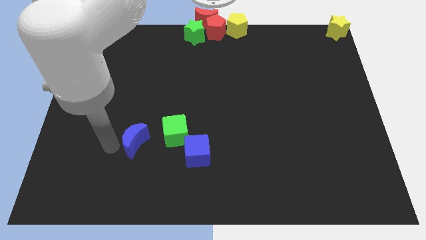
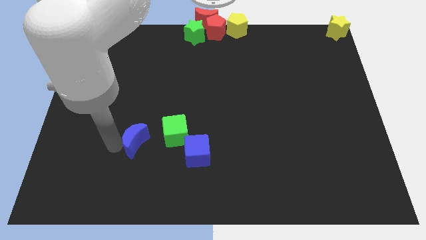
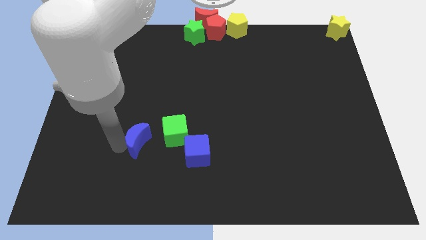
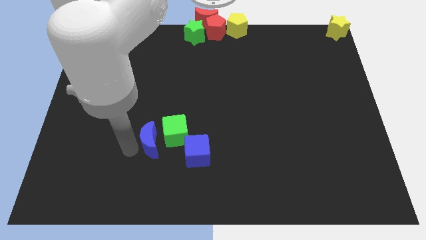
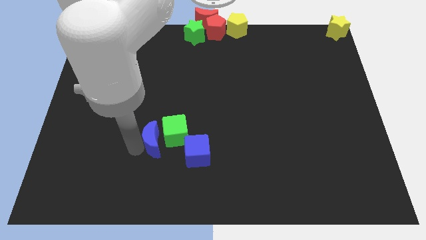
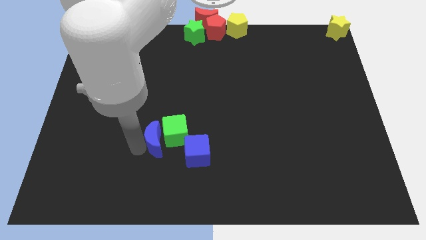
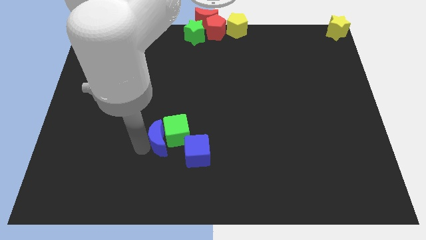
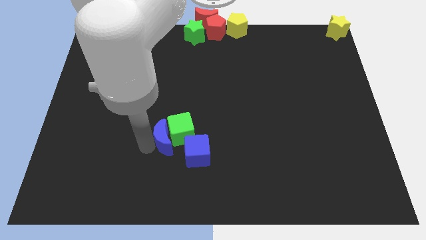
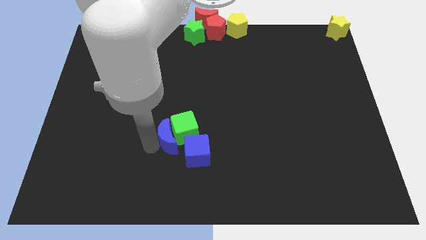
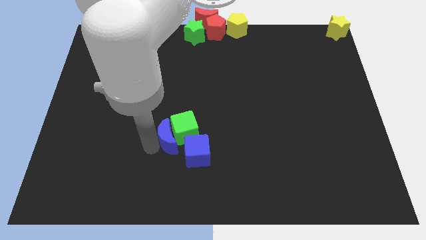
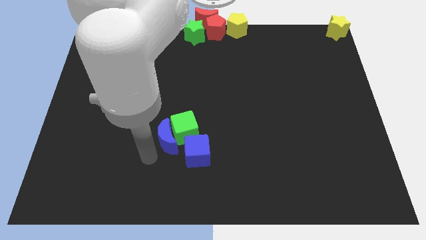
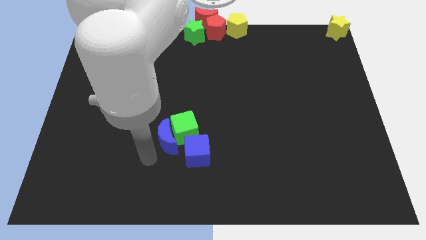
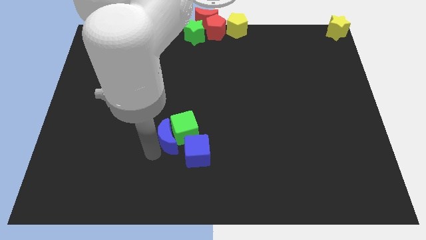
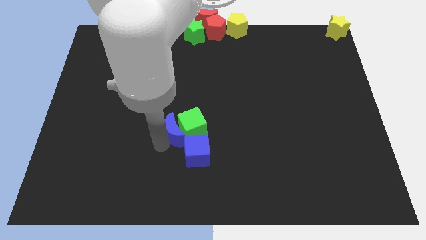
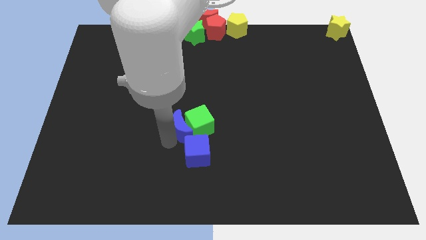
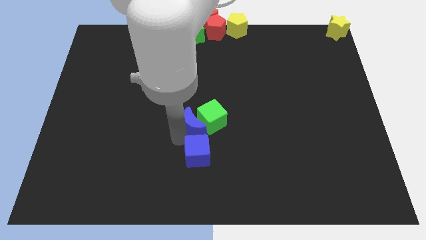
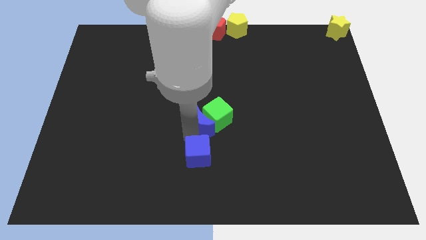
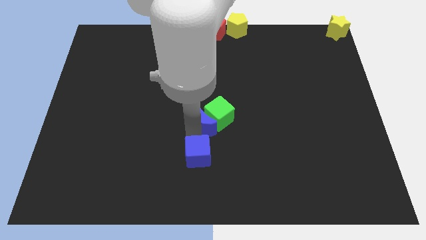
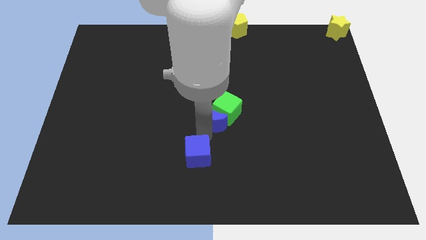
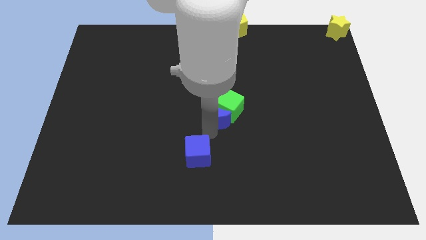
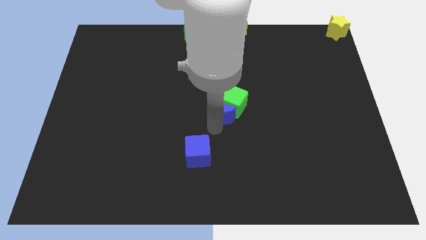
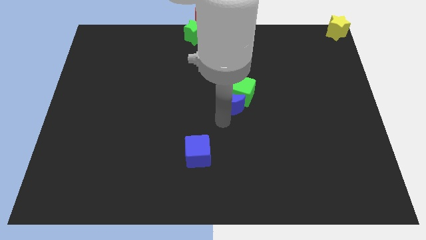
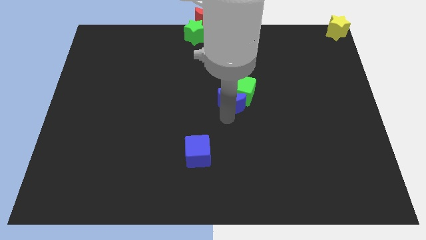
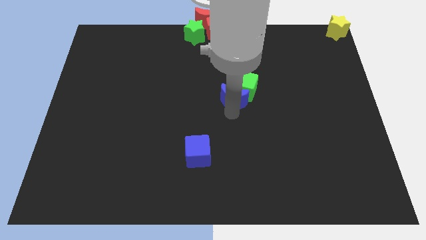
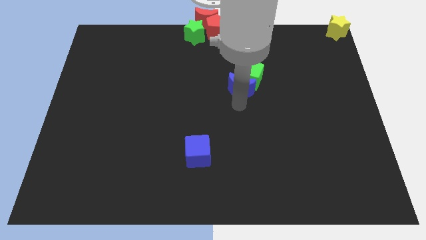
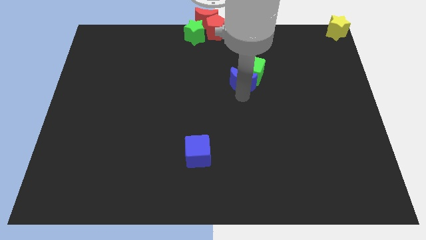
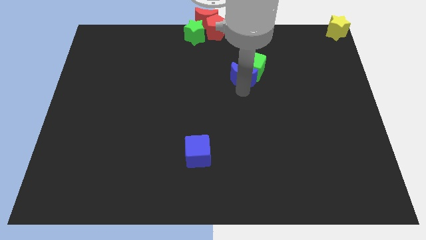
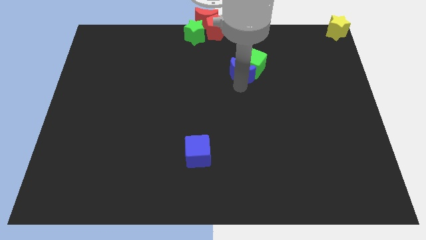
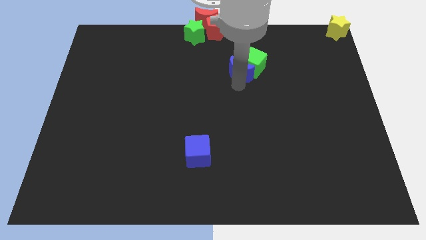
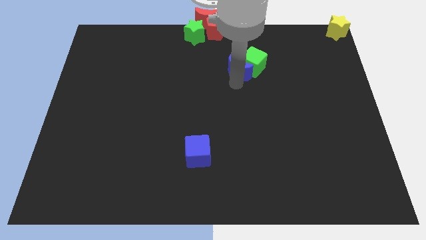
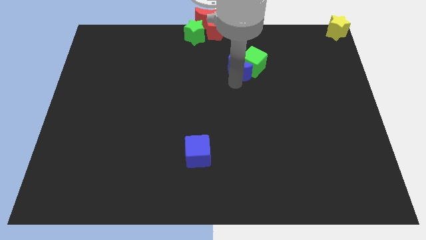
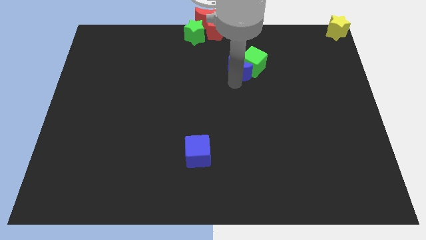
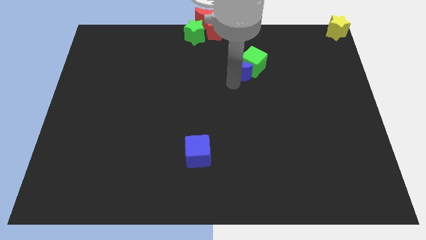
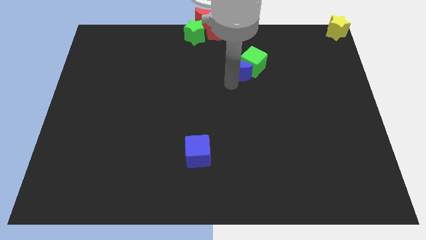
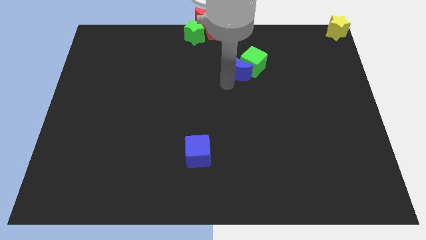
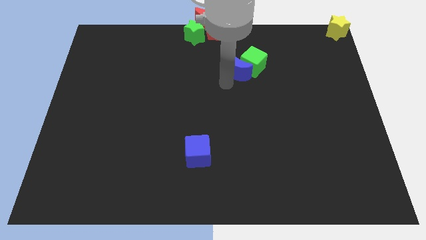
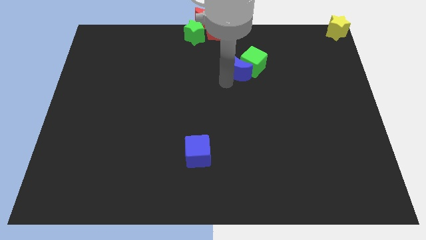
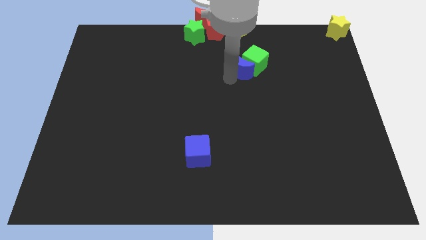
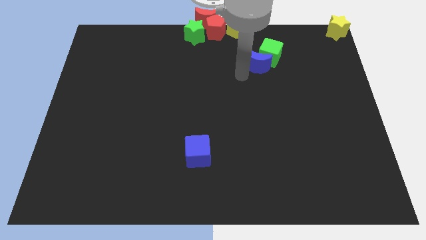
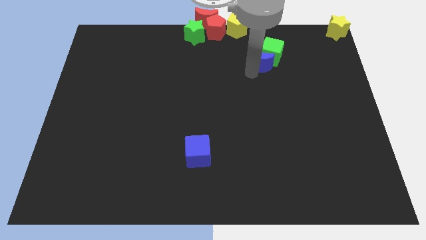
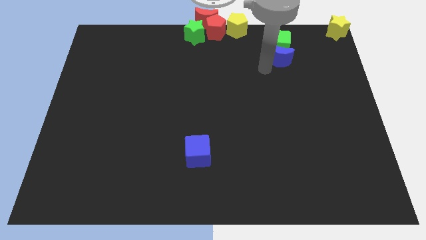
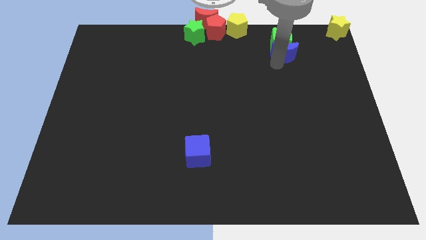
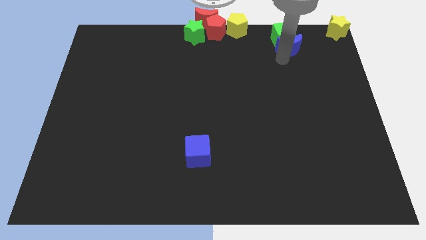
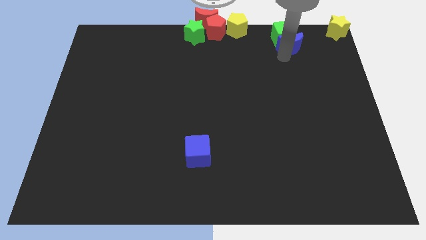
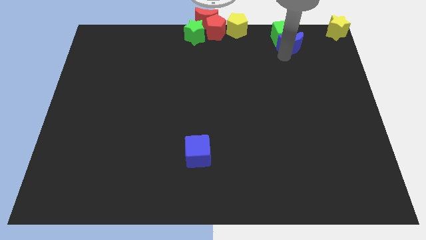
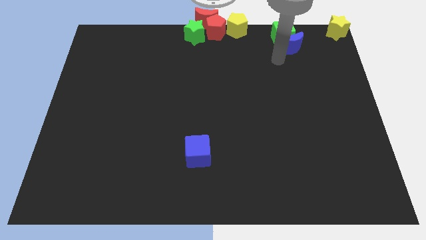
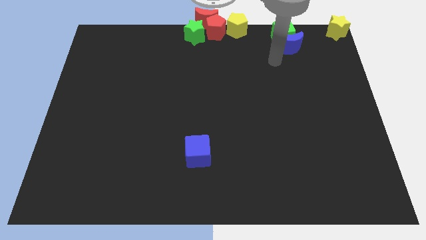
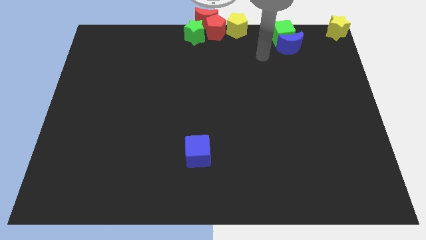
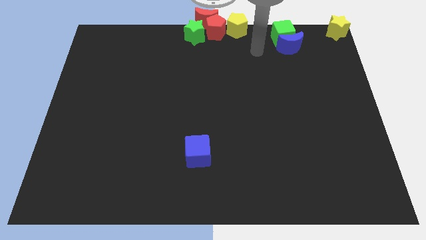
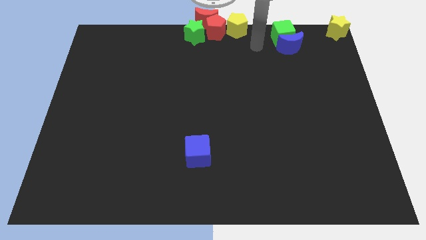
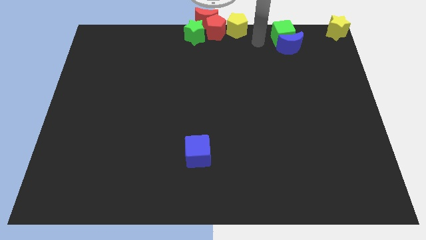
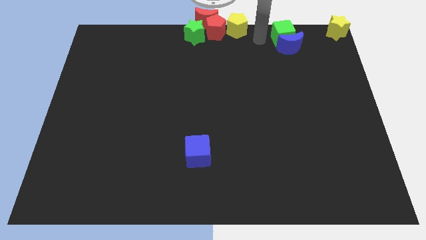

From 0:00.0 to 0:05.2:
push the blue crescent into the green cube

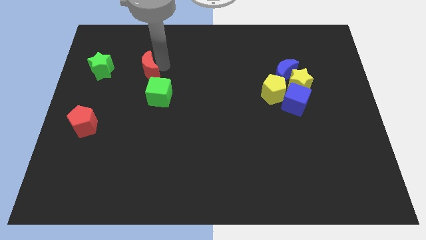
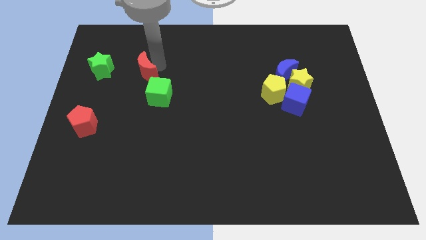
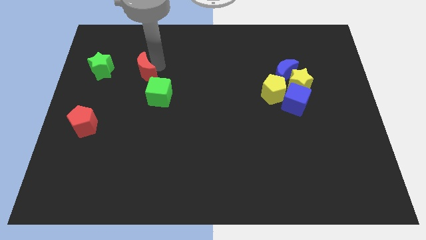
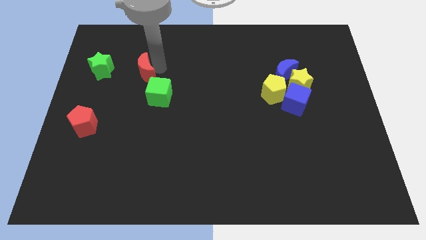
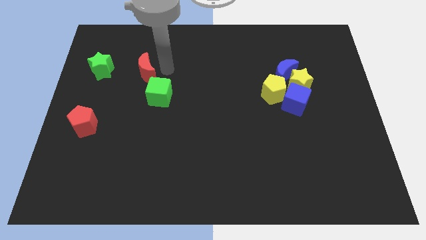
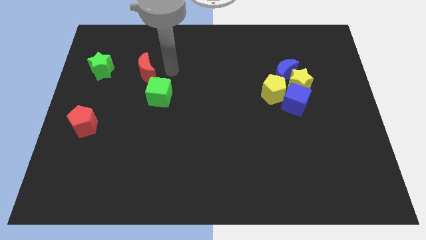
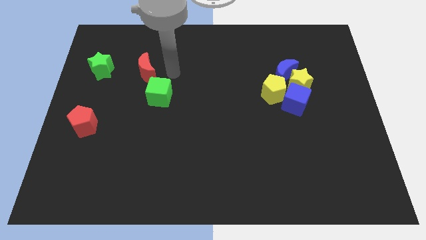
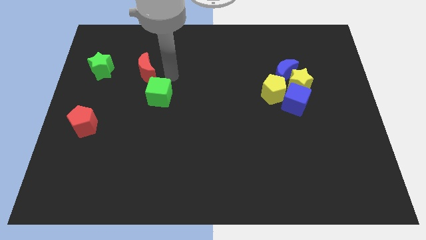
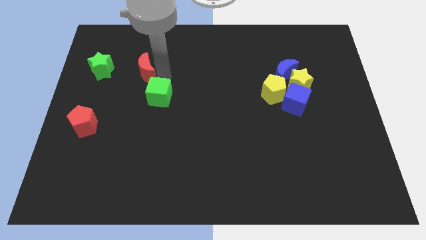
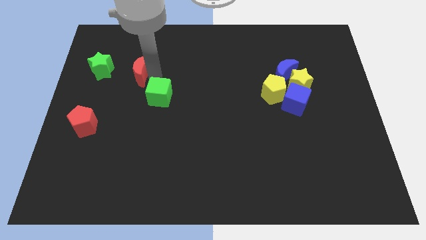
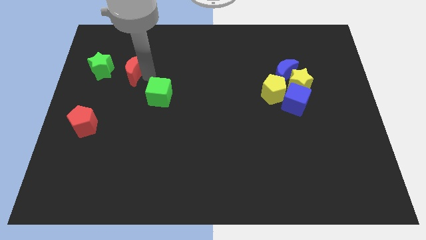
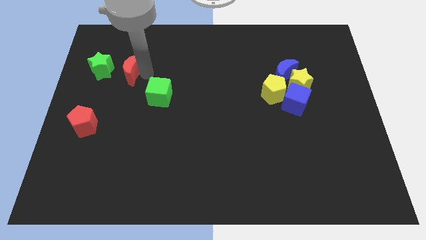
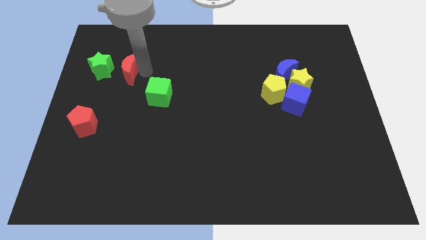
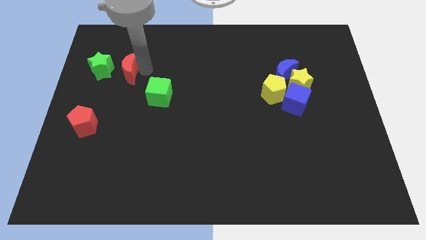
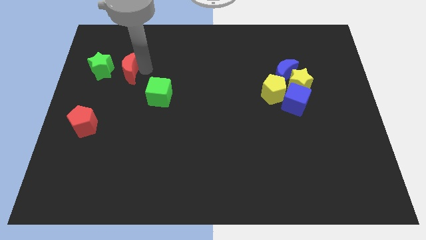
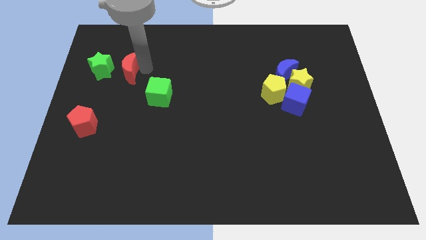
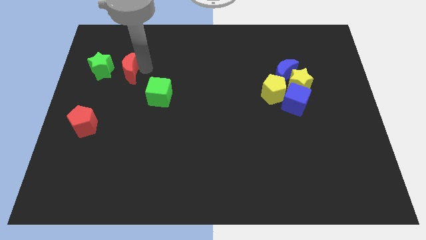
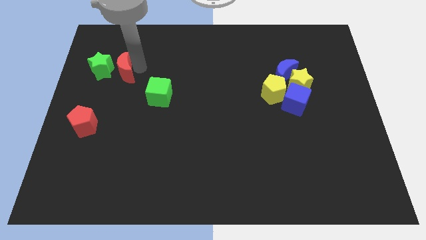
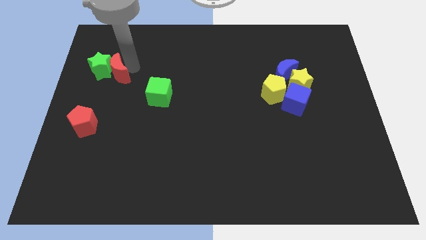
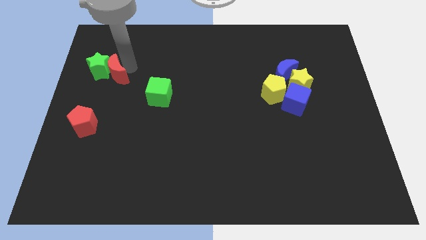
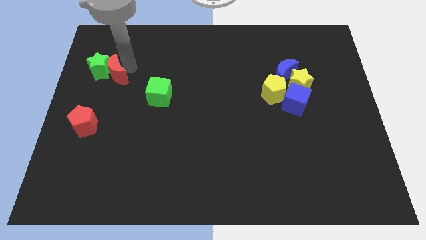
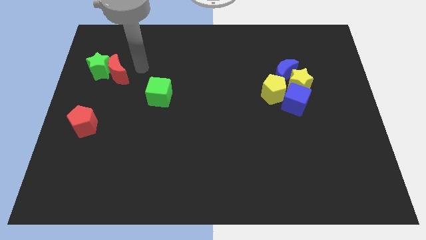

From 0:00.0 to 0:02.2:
move the red moon into the green star

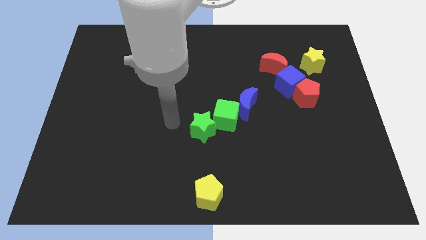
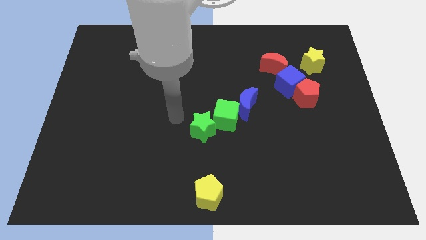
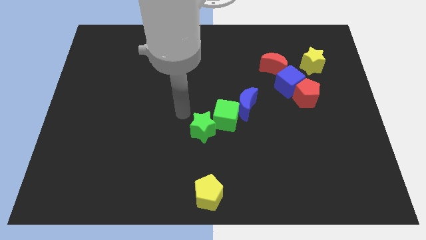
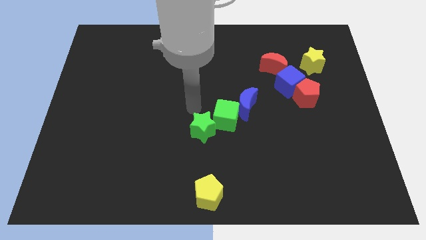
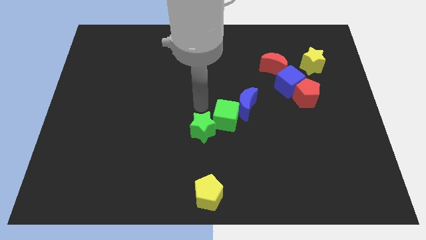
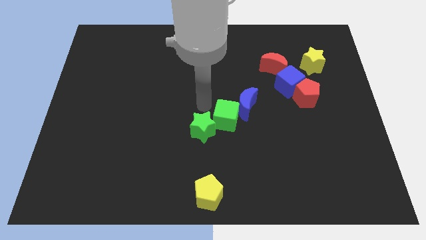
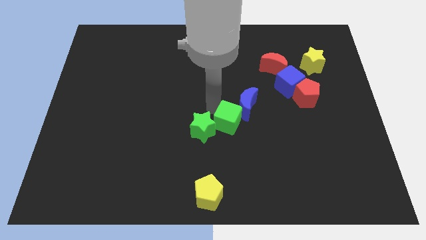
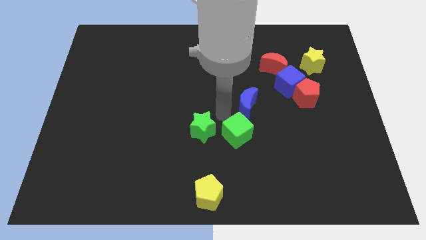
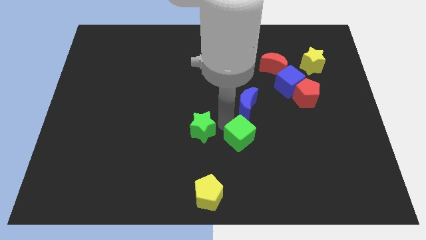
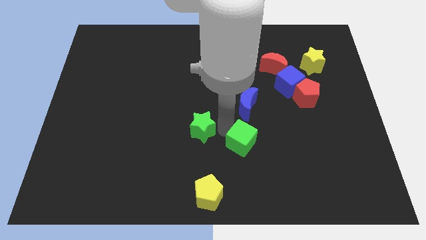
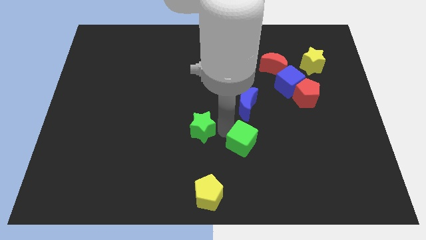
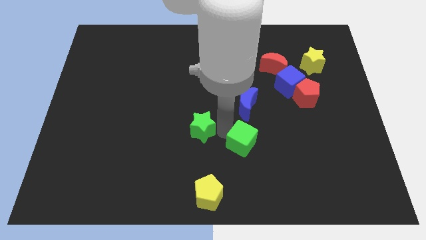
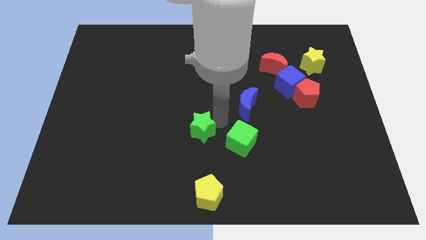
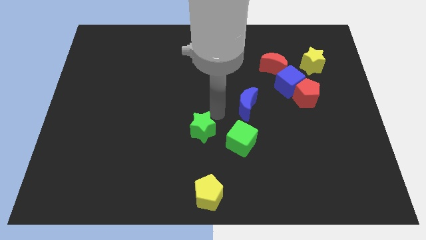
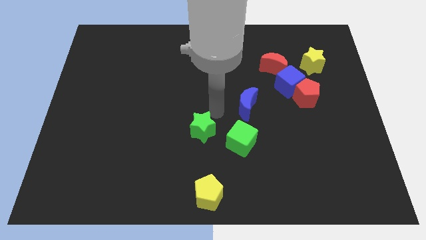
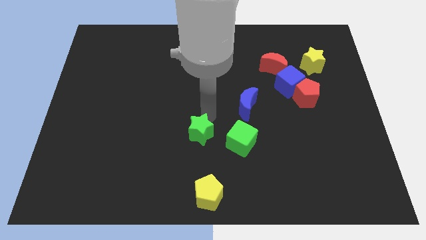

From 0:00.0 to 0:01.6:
slightly push the green cube to the bottom of the blue crescent

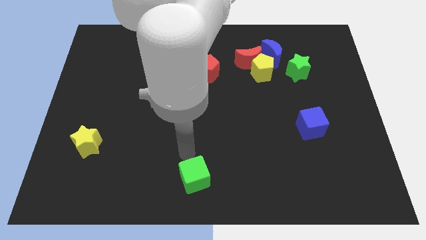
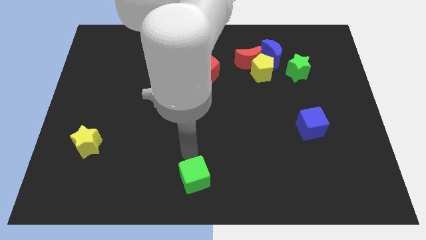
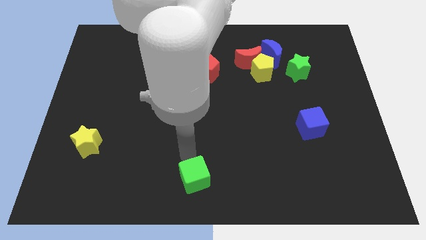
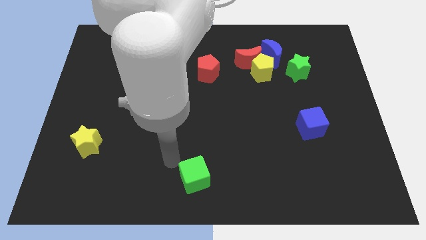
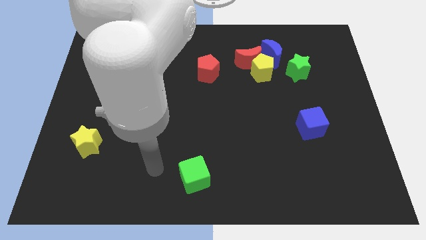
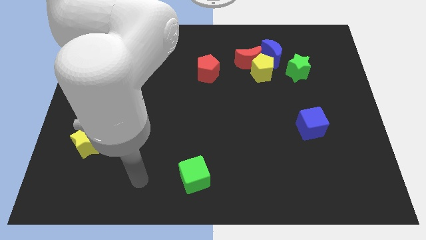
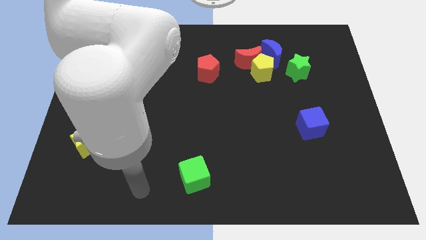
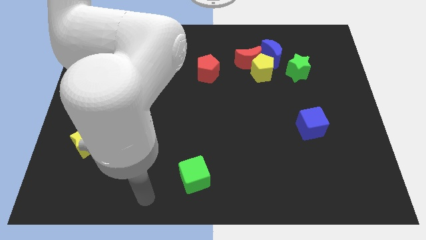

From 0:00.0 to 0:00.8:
move your arm to the left side of the green cube
